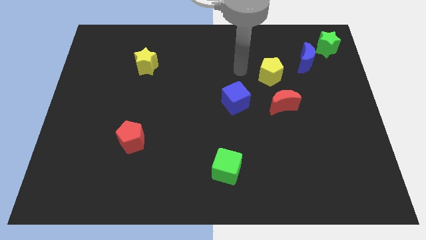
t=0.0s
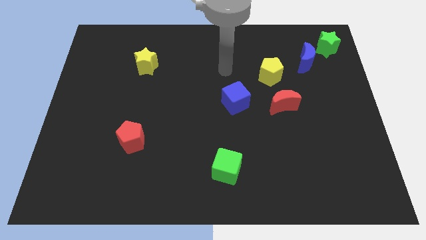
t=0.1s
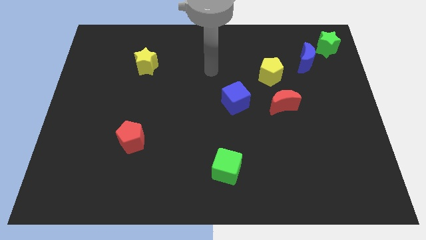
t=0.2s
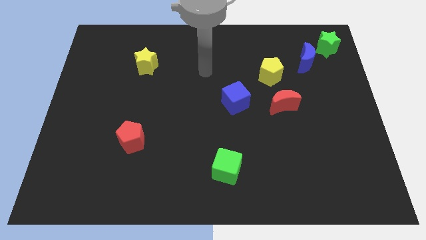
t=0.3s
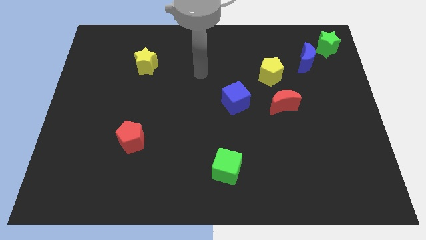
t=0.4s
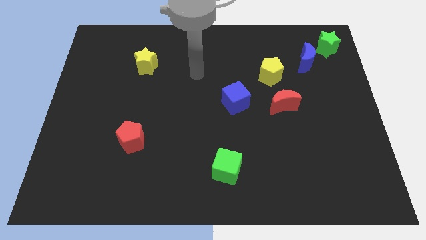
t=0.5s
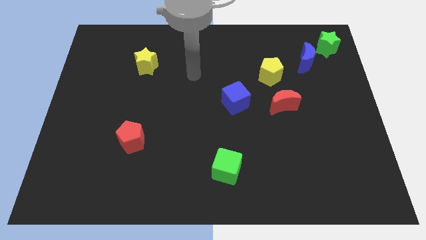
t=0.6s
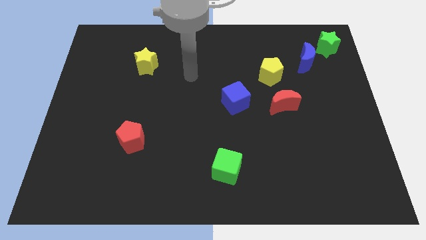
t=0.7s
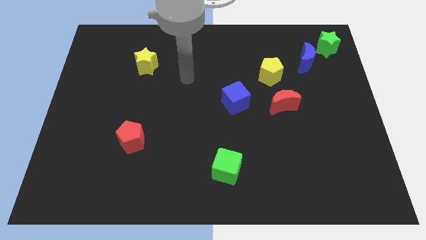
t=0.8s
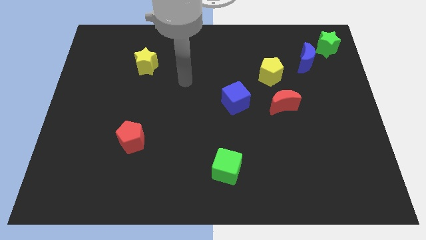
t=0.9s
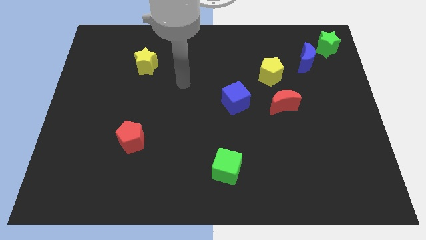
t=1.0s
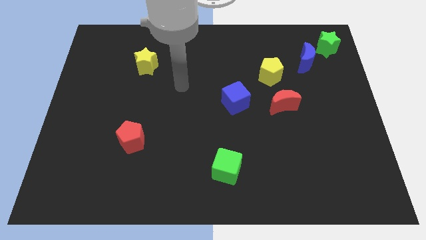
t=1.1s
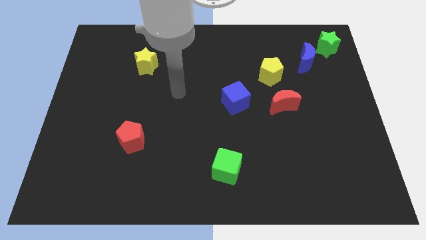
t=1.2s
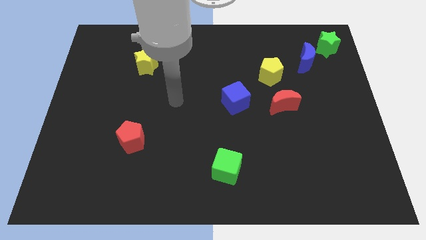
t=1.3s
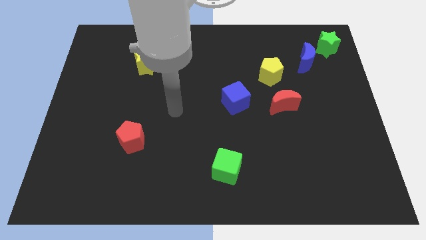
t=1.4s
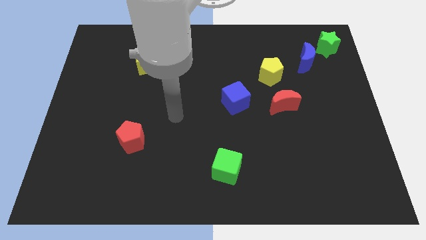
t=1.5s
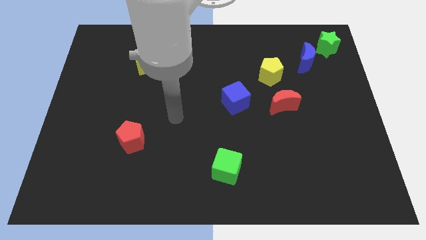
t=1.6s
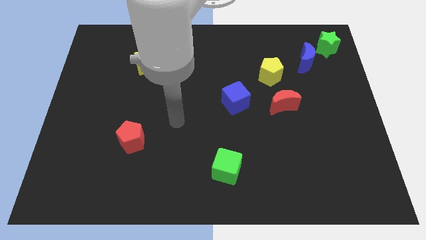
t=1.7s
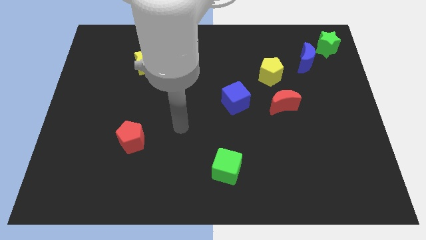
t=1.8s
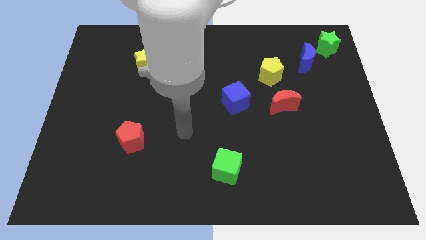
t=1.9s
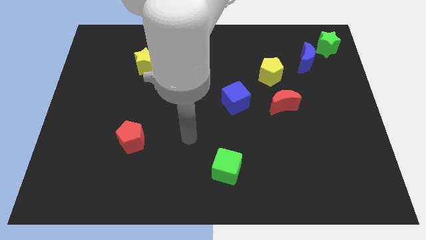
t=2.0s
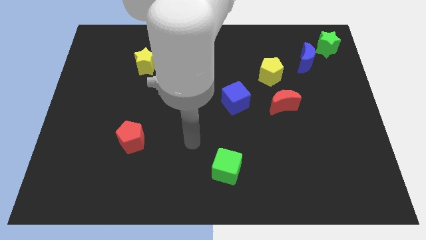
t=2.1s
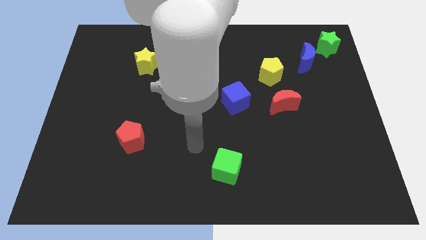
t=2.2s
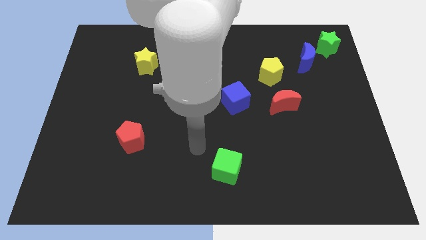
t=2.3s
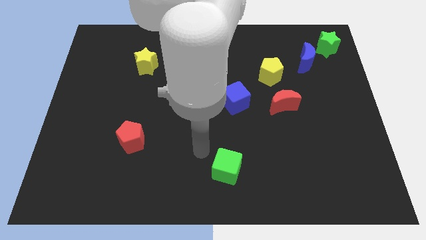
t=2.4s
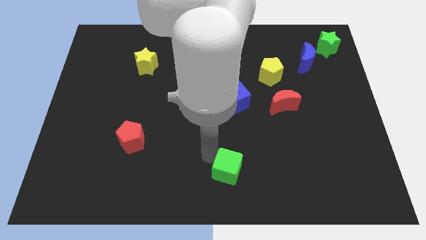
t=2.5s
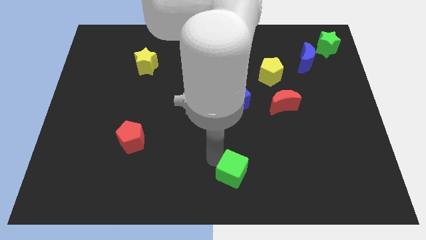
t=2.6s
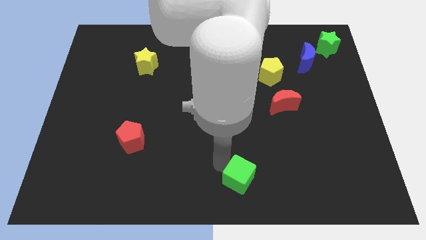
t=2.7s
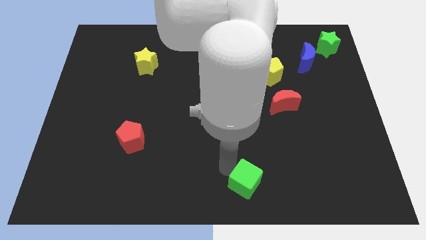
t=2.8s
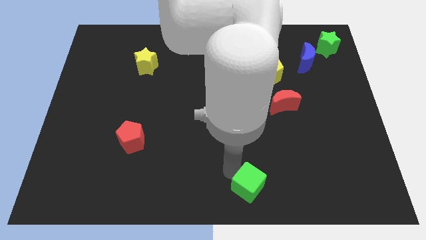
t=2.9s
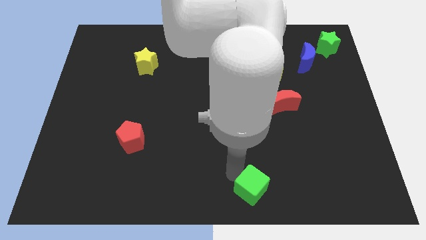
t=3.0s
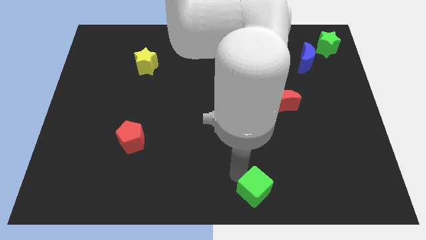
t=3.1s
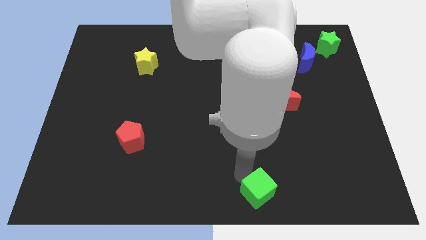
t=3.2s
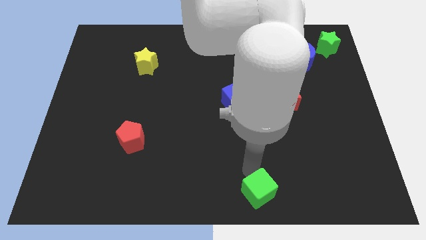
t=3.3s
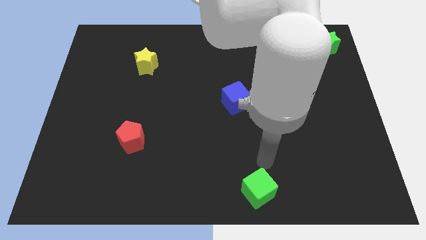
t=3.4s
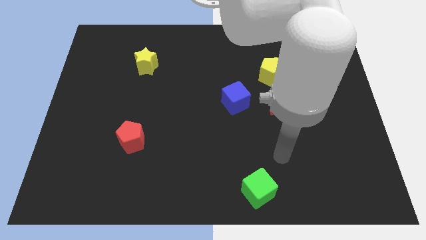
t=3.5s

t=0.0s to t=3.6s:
push the green cube towards the bottom center of the board

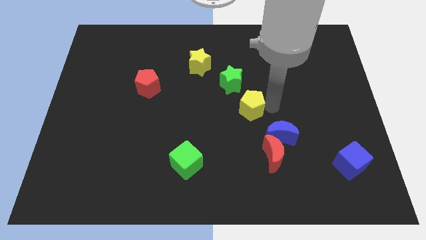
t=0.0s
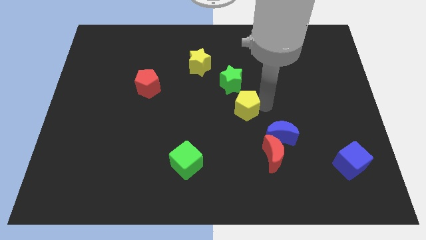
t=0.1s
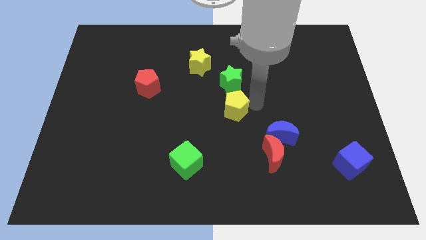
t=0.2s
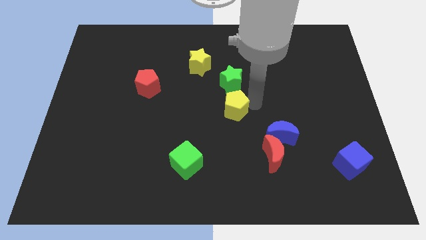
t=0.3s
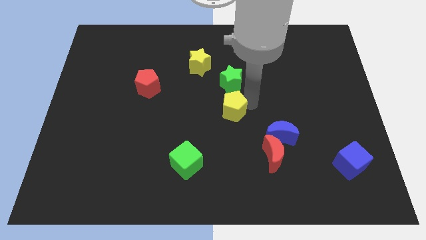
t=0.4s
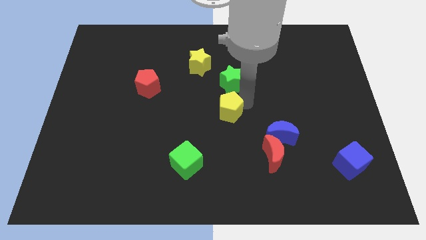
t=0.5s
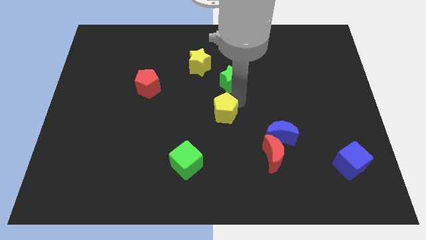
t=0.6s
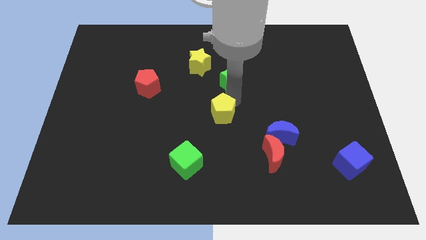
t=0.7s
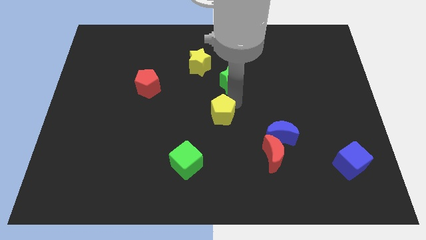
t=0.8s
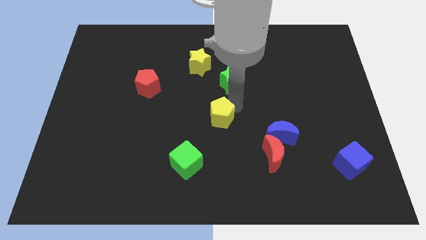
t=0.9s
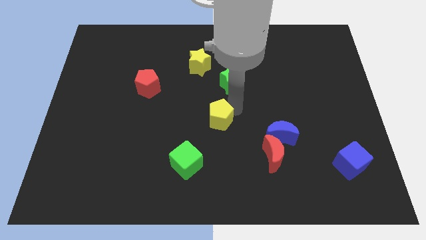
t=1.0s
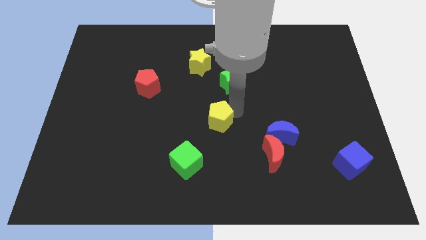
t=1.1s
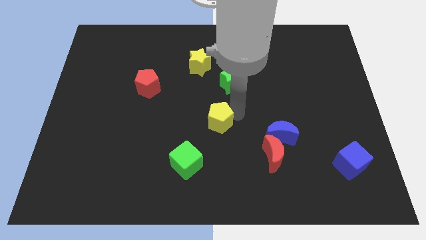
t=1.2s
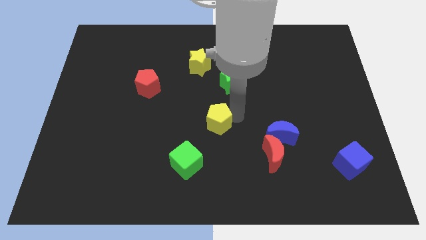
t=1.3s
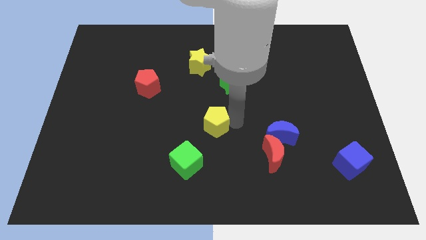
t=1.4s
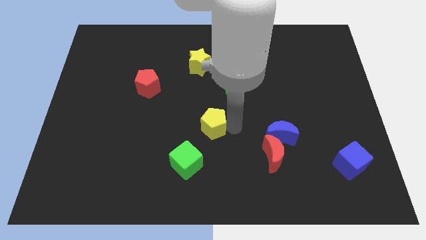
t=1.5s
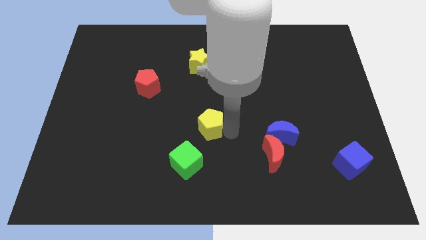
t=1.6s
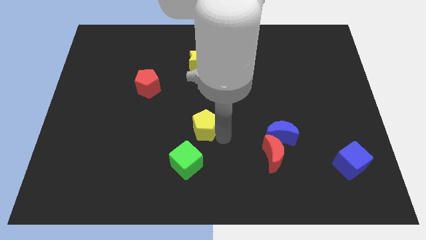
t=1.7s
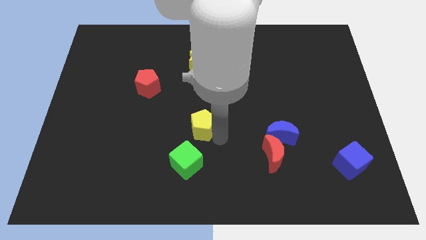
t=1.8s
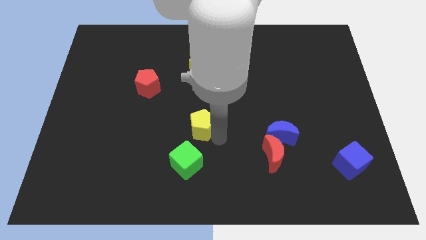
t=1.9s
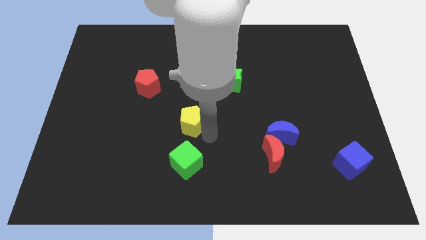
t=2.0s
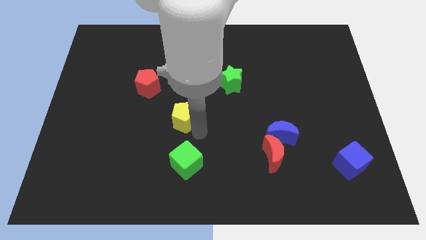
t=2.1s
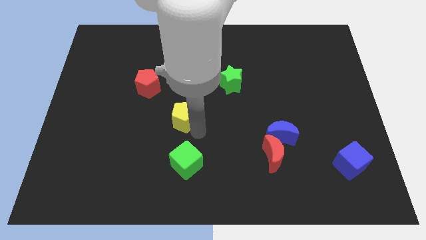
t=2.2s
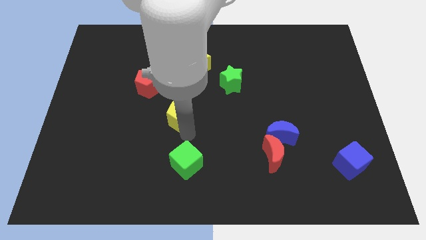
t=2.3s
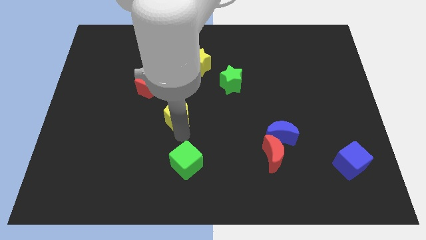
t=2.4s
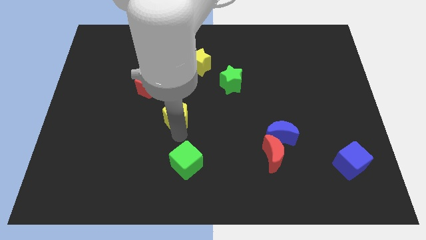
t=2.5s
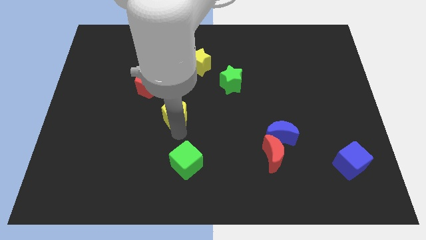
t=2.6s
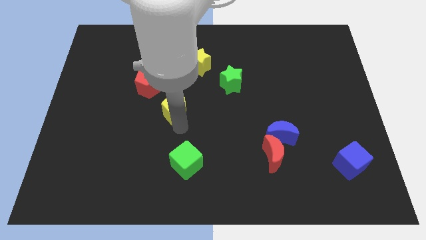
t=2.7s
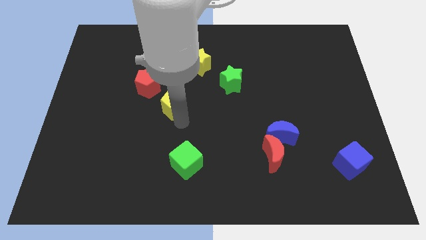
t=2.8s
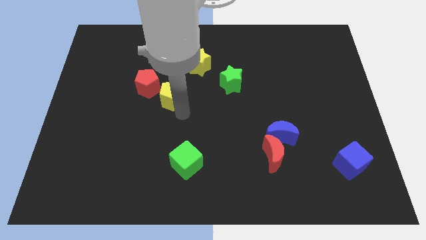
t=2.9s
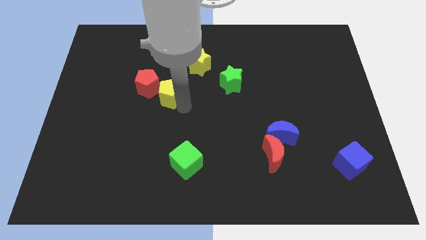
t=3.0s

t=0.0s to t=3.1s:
push yellow pentagon towards red pentagon

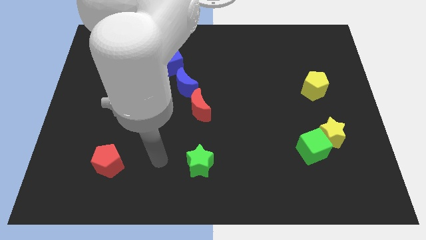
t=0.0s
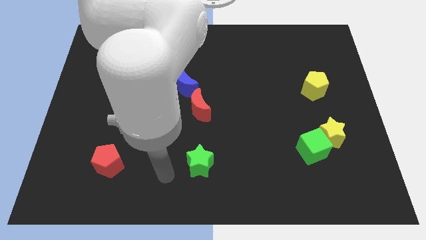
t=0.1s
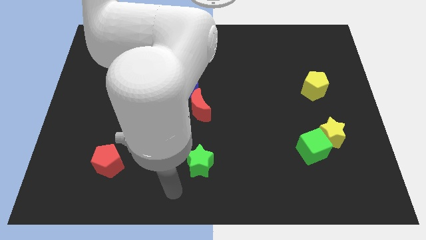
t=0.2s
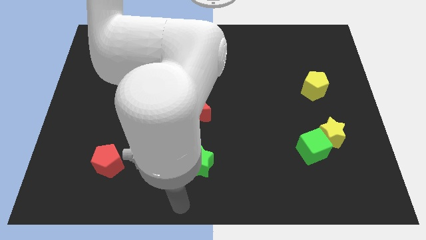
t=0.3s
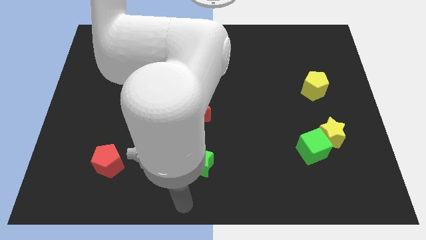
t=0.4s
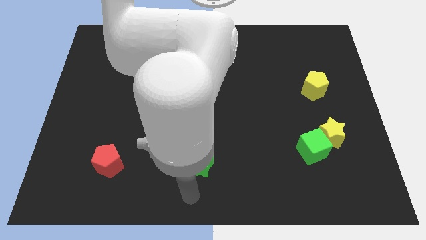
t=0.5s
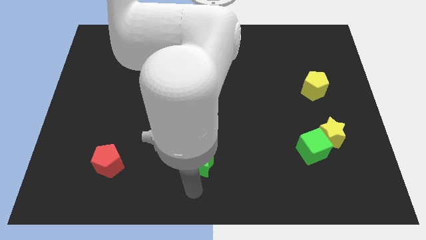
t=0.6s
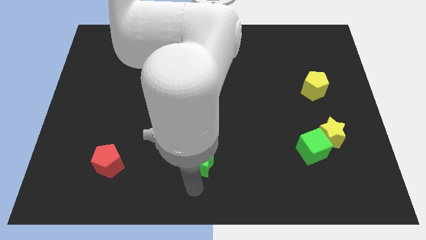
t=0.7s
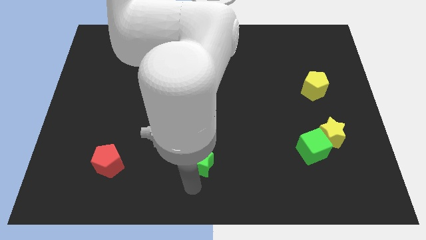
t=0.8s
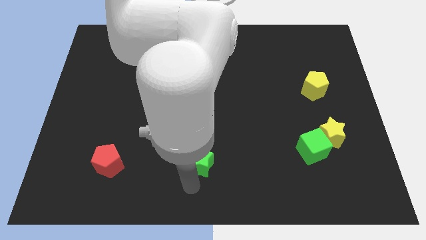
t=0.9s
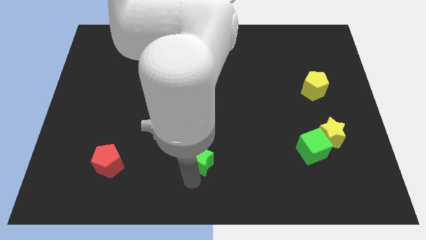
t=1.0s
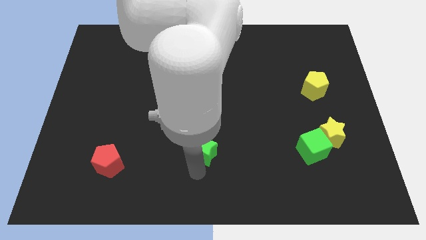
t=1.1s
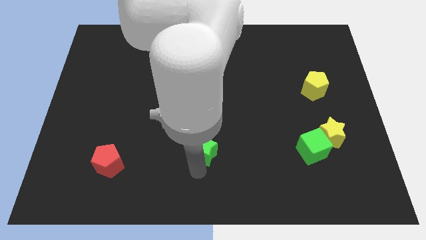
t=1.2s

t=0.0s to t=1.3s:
move the green star slightly up

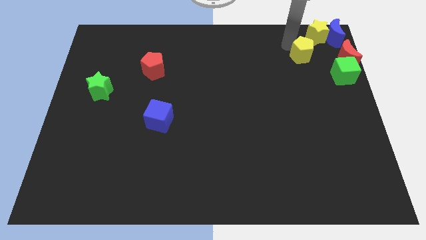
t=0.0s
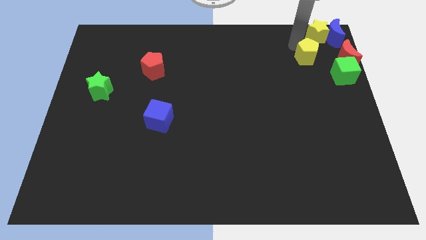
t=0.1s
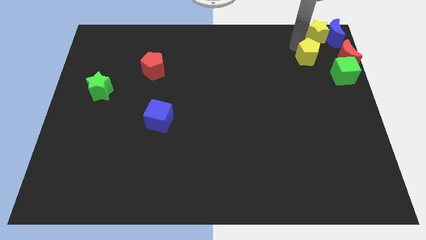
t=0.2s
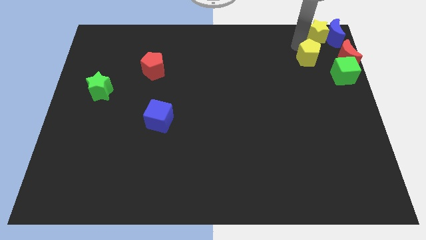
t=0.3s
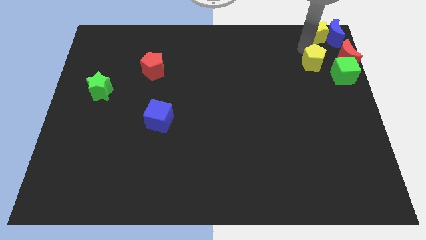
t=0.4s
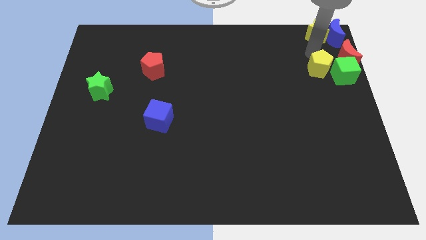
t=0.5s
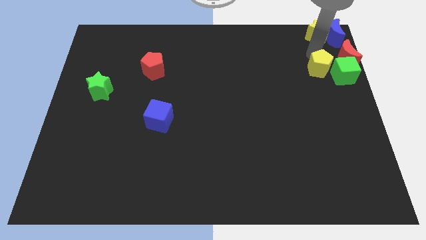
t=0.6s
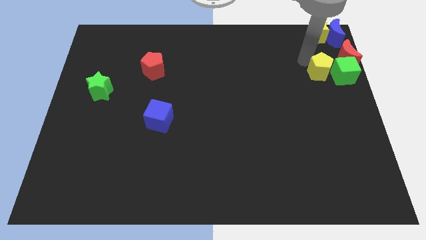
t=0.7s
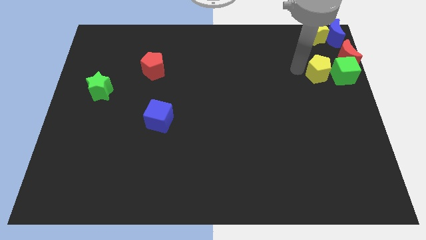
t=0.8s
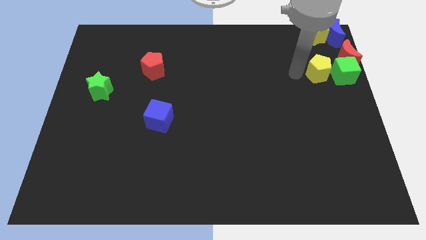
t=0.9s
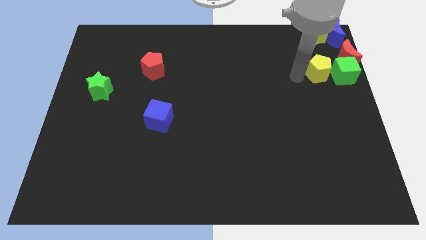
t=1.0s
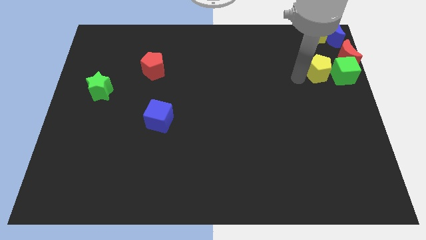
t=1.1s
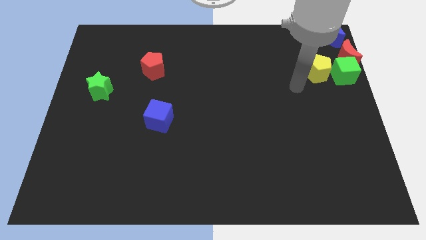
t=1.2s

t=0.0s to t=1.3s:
move the yellow pentagon down to the yellow star
